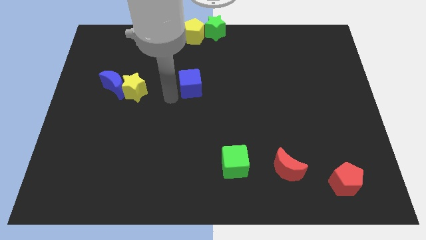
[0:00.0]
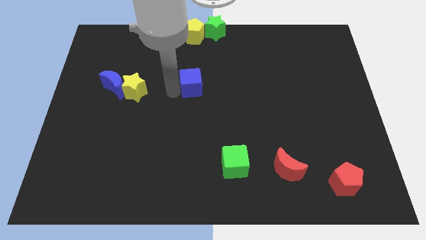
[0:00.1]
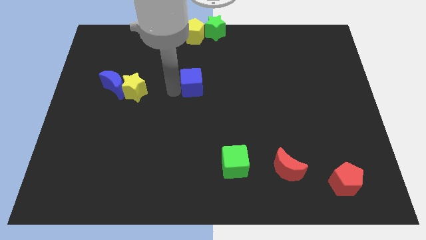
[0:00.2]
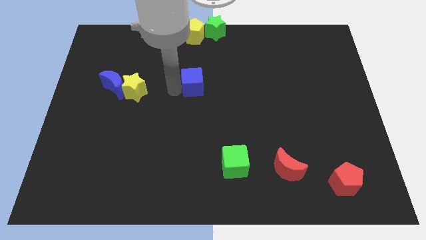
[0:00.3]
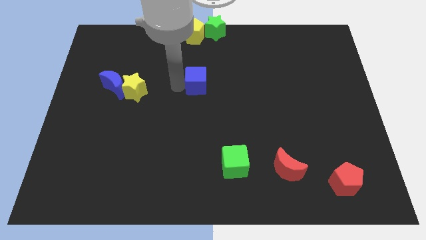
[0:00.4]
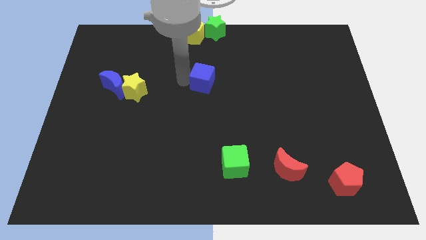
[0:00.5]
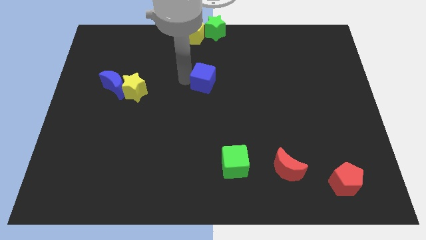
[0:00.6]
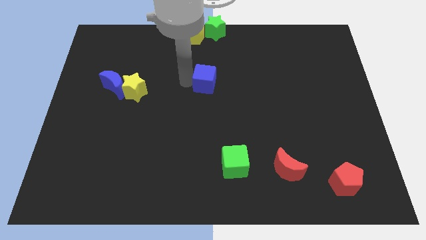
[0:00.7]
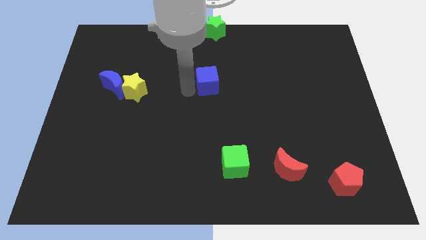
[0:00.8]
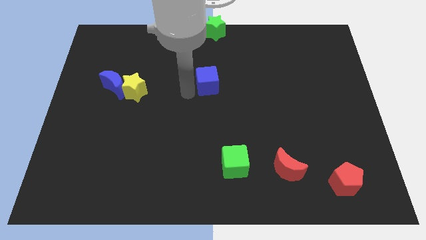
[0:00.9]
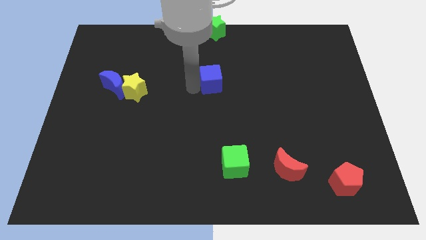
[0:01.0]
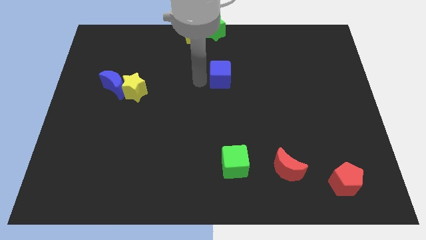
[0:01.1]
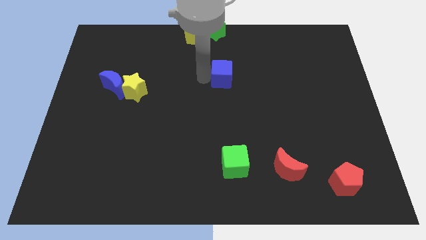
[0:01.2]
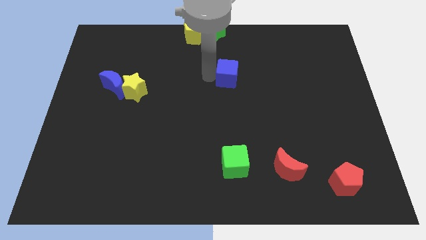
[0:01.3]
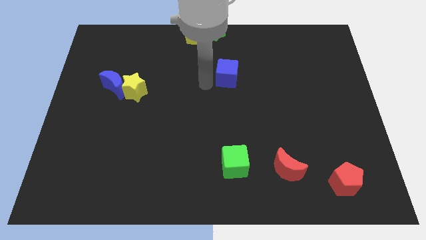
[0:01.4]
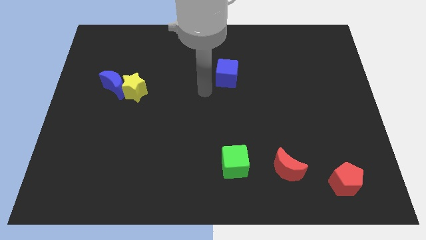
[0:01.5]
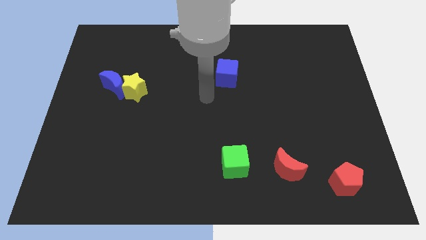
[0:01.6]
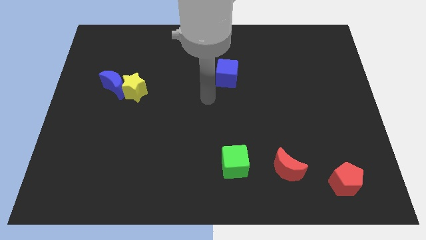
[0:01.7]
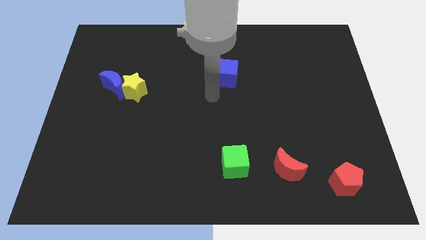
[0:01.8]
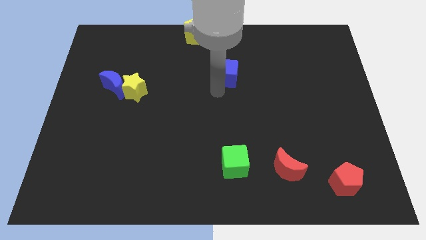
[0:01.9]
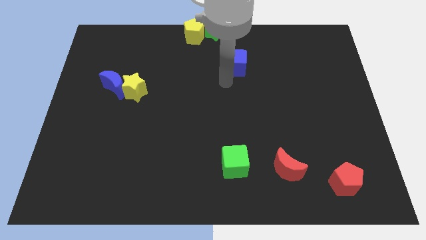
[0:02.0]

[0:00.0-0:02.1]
place the blue cube vertically above the green cube

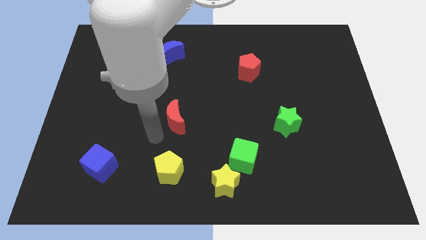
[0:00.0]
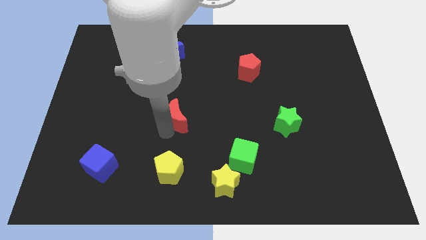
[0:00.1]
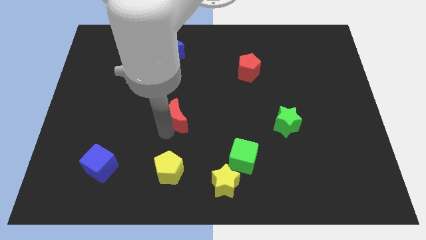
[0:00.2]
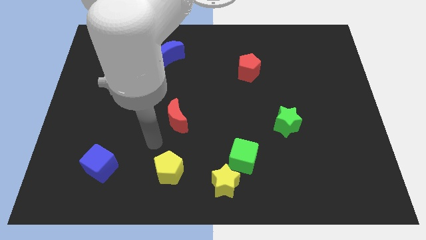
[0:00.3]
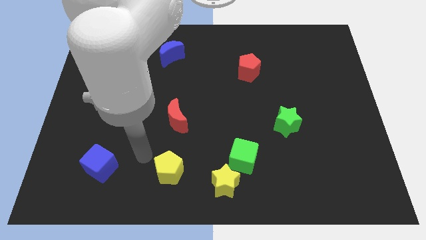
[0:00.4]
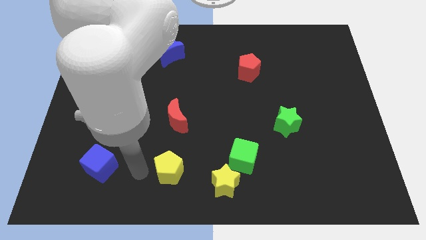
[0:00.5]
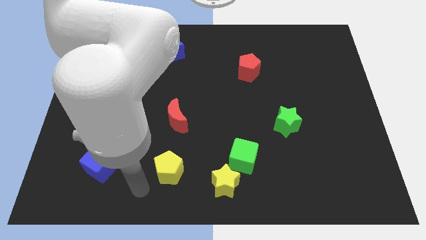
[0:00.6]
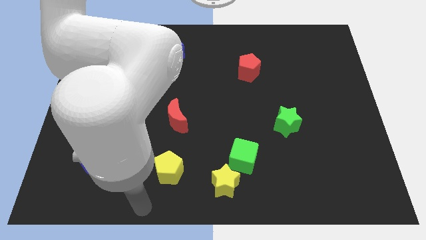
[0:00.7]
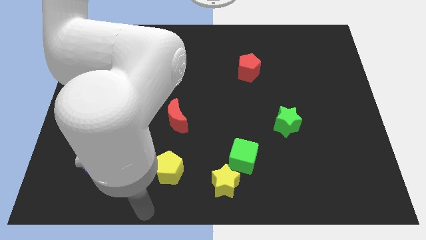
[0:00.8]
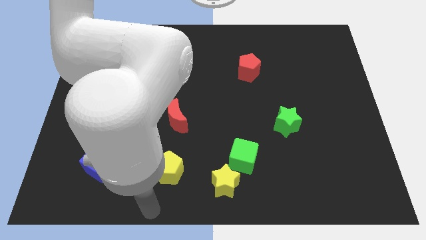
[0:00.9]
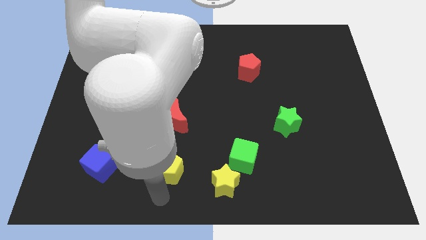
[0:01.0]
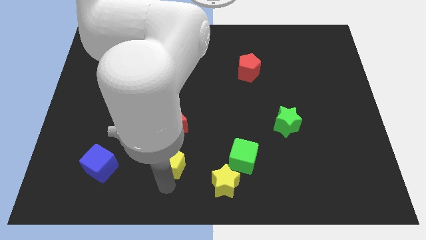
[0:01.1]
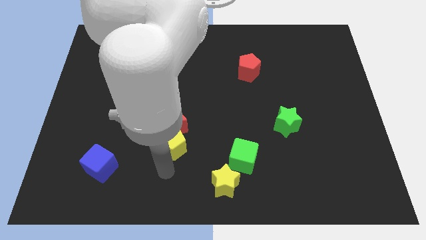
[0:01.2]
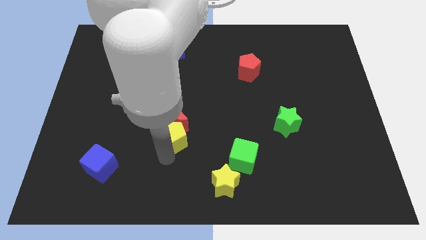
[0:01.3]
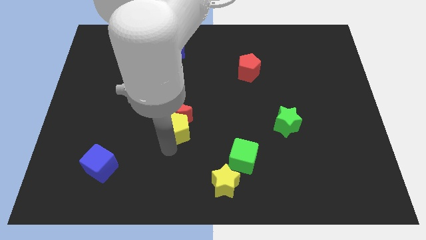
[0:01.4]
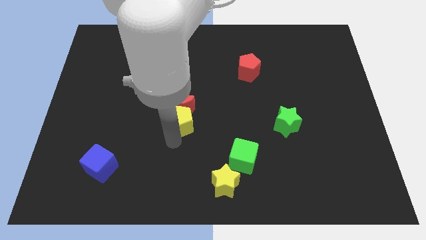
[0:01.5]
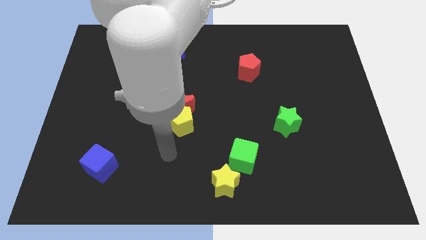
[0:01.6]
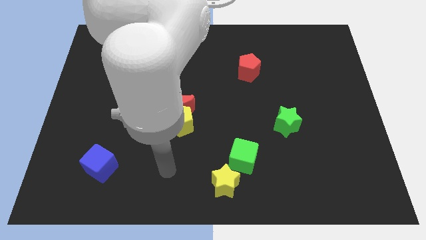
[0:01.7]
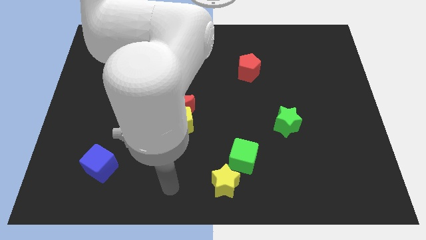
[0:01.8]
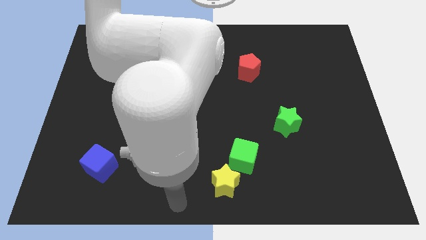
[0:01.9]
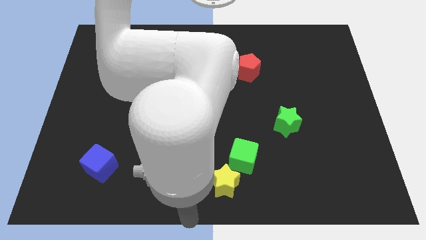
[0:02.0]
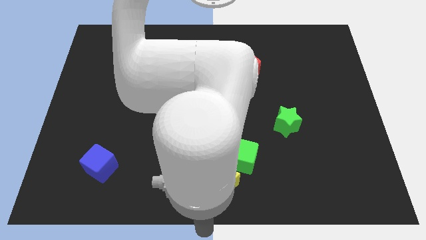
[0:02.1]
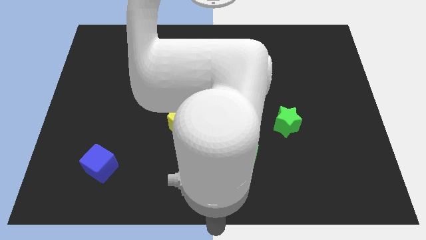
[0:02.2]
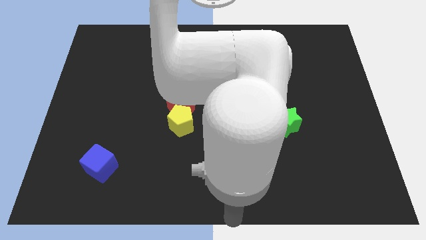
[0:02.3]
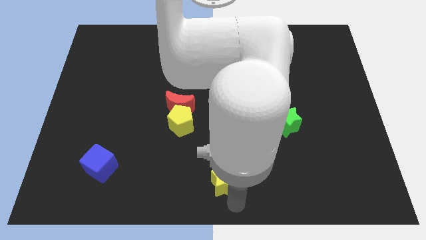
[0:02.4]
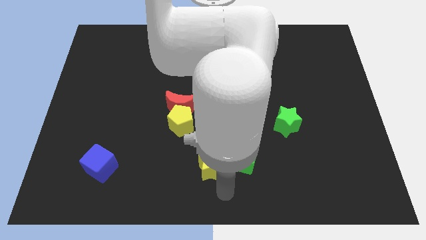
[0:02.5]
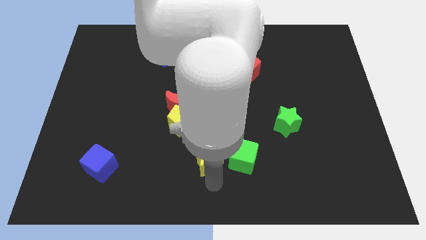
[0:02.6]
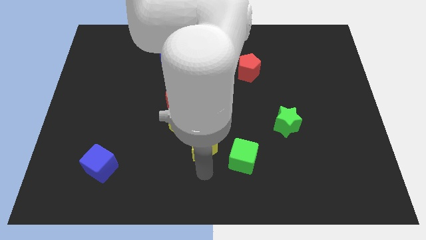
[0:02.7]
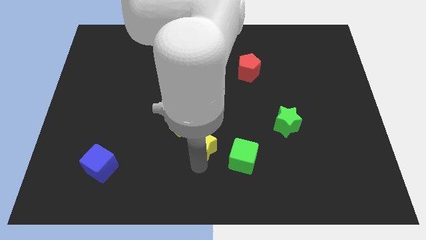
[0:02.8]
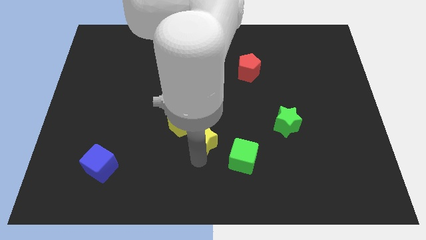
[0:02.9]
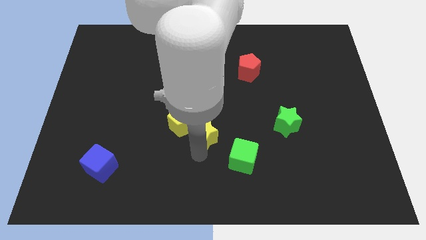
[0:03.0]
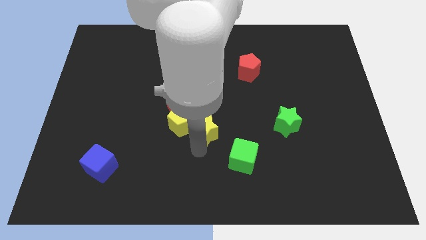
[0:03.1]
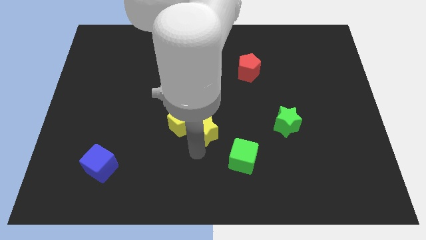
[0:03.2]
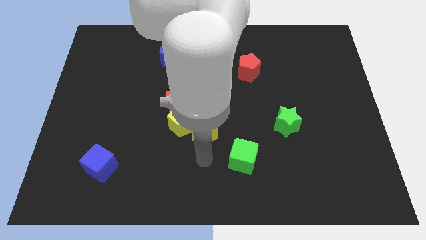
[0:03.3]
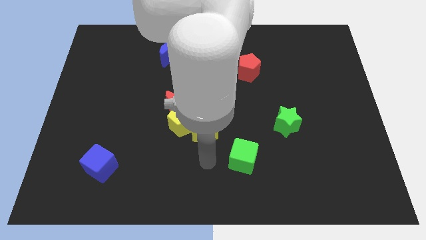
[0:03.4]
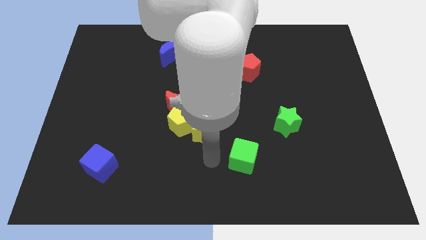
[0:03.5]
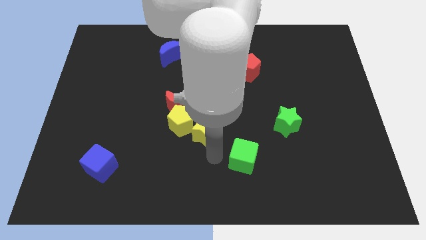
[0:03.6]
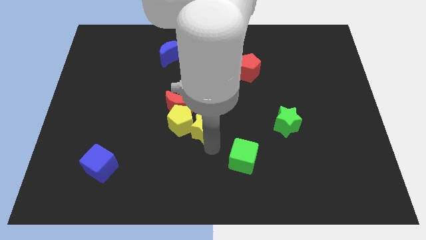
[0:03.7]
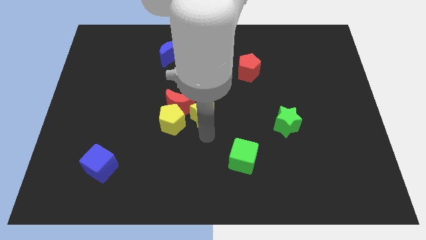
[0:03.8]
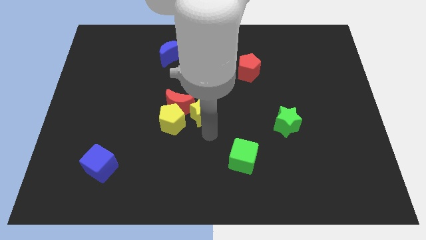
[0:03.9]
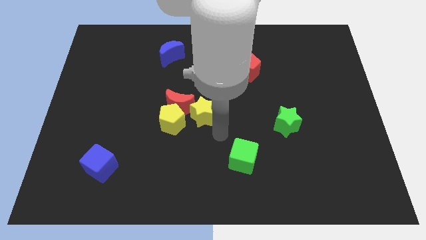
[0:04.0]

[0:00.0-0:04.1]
push the yellow star into the red crescent

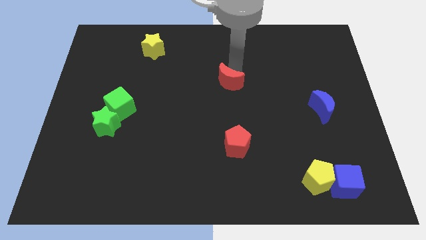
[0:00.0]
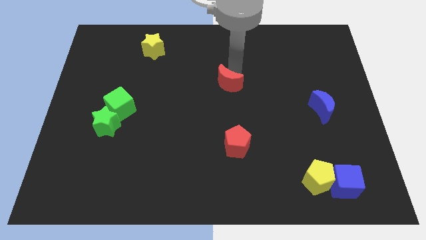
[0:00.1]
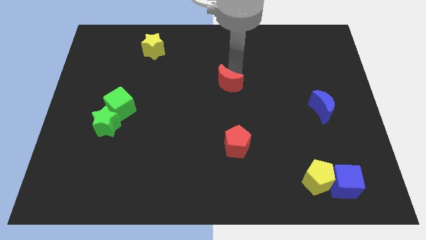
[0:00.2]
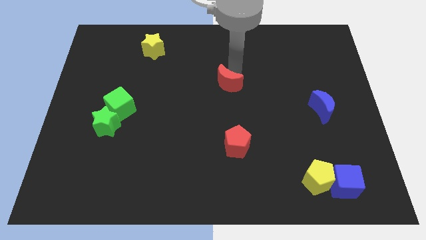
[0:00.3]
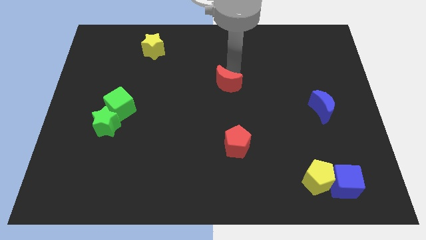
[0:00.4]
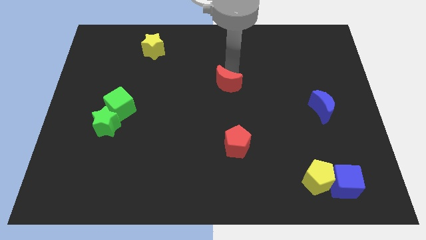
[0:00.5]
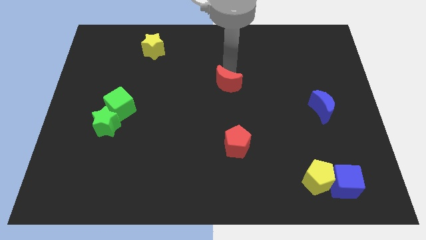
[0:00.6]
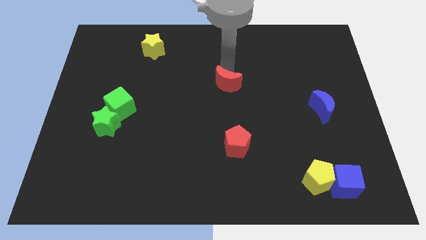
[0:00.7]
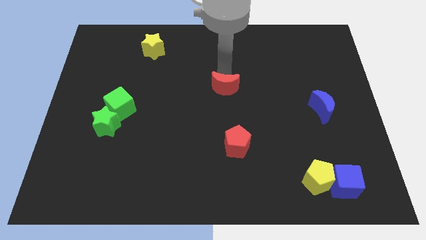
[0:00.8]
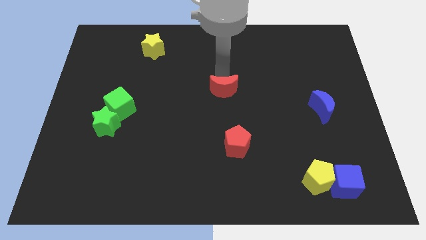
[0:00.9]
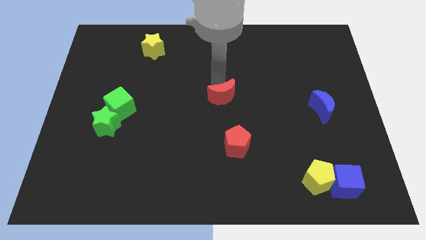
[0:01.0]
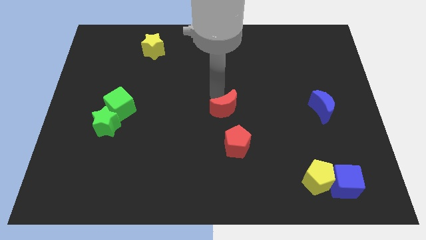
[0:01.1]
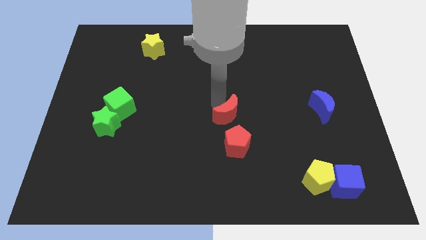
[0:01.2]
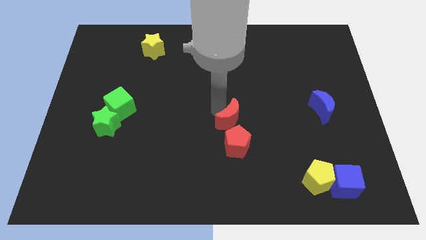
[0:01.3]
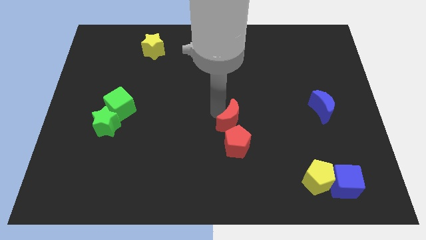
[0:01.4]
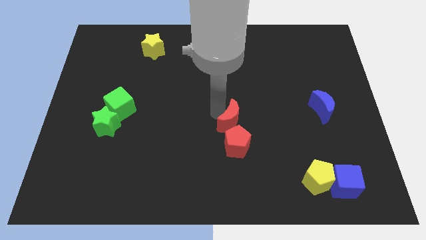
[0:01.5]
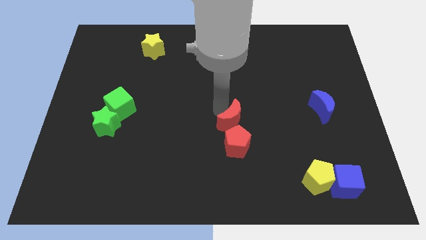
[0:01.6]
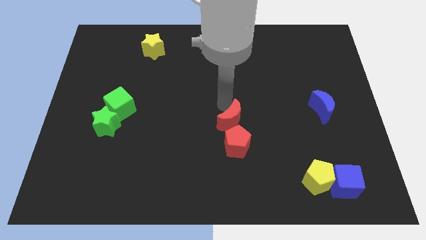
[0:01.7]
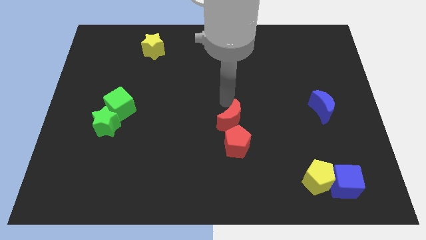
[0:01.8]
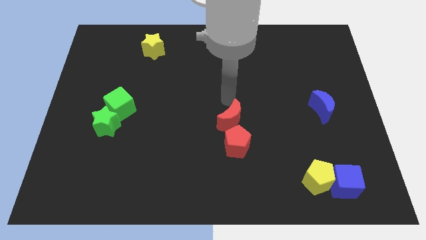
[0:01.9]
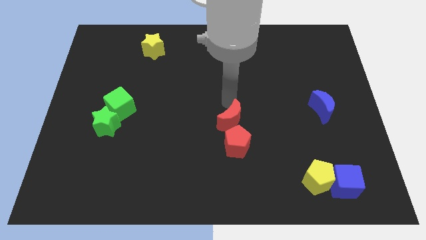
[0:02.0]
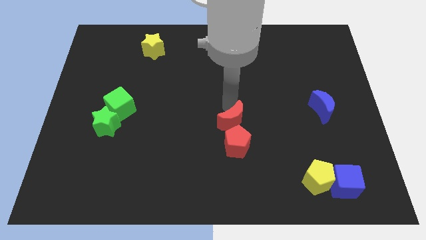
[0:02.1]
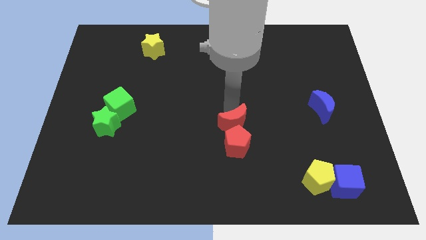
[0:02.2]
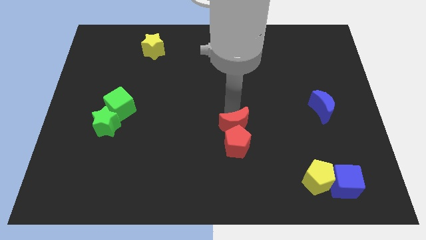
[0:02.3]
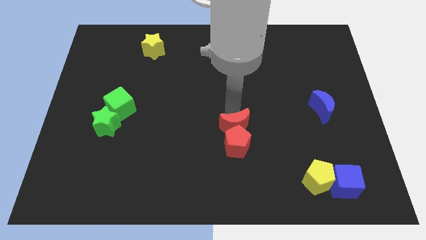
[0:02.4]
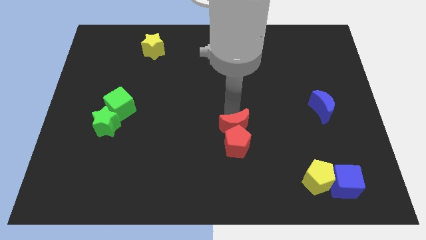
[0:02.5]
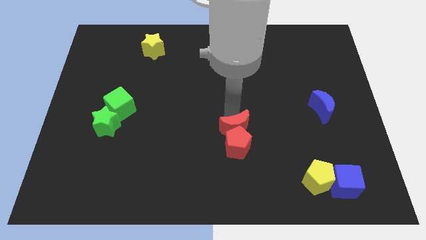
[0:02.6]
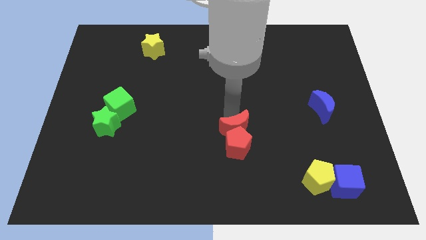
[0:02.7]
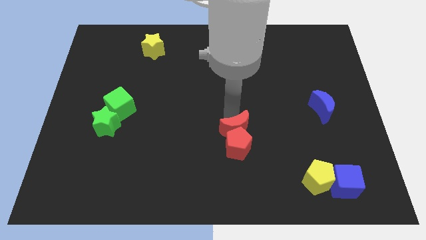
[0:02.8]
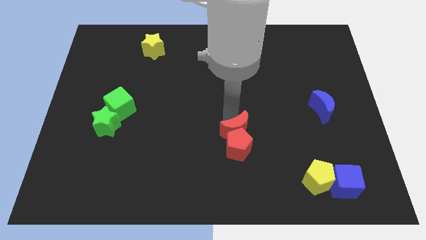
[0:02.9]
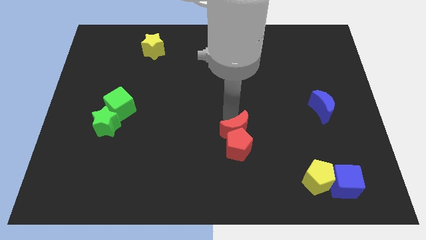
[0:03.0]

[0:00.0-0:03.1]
adjust the red moon on the top left of the red pentagon
